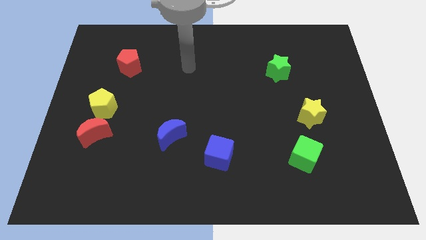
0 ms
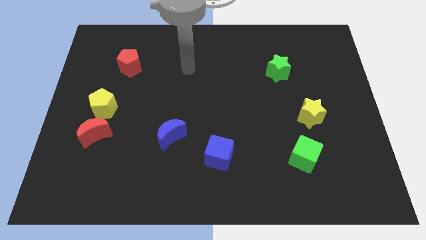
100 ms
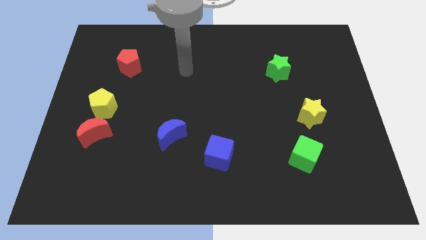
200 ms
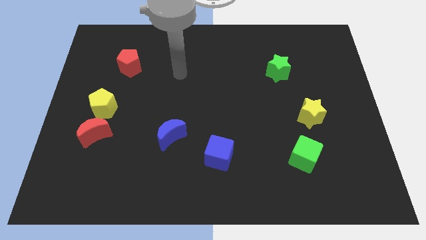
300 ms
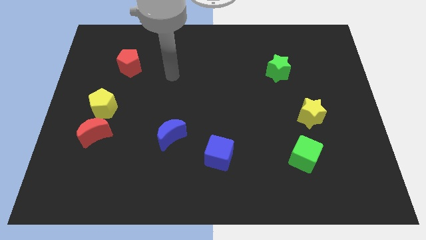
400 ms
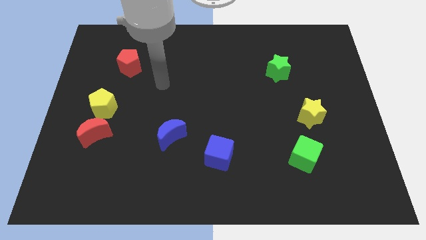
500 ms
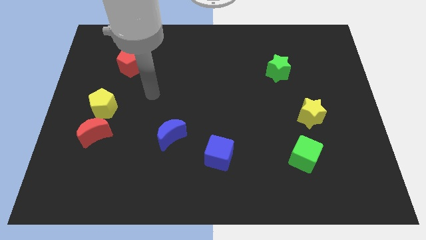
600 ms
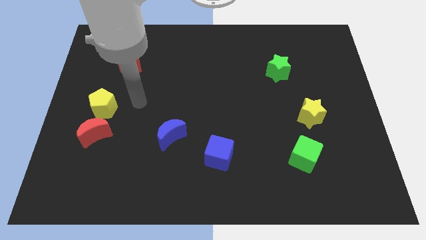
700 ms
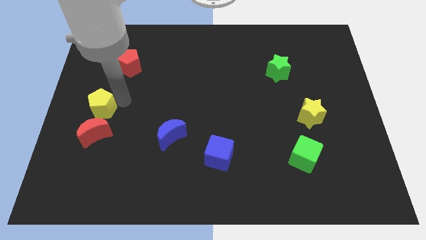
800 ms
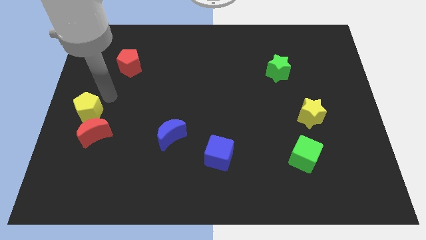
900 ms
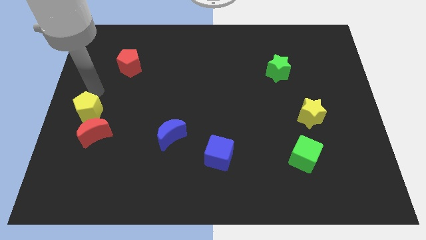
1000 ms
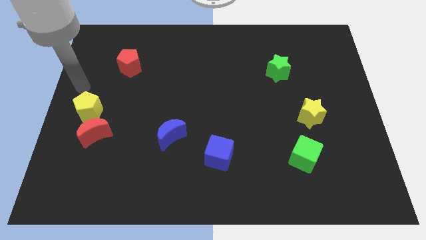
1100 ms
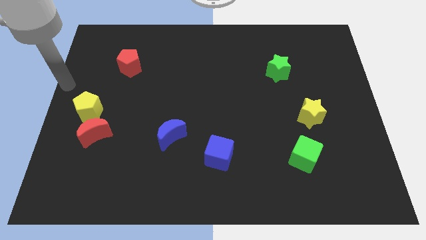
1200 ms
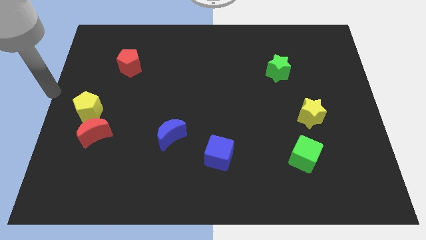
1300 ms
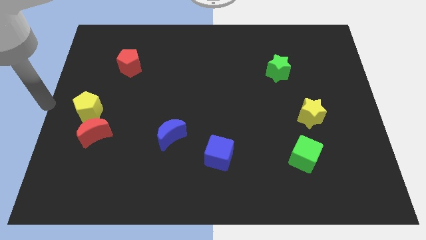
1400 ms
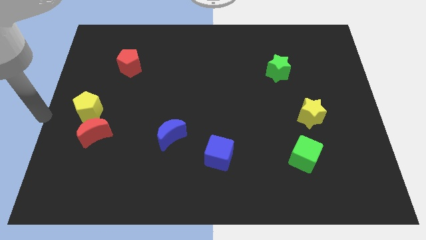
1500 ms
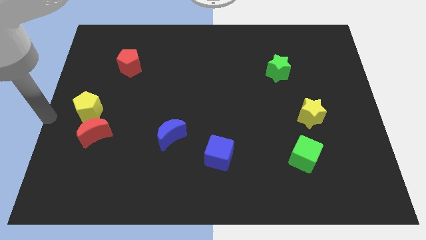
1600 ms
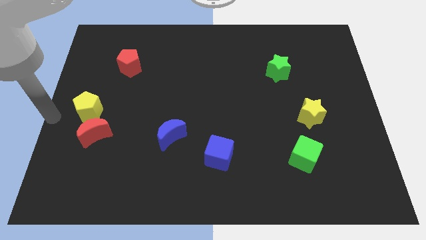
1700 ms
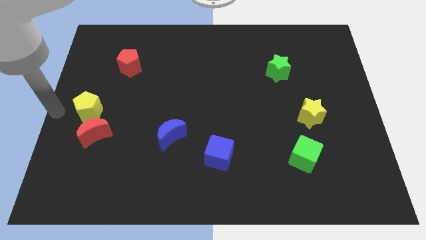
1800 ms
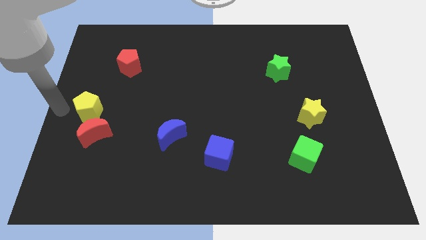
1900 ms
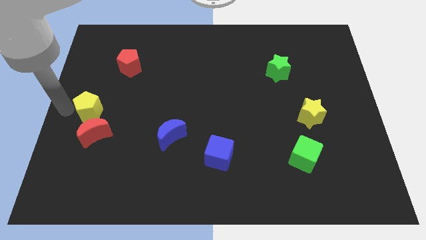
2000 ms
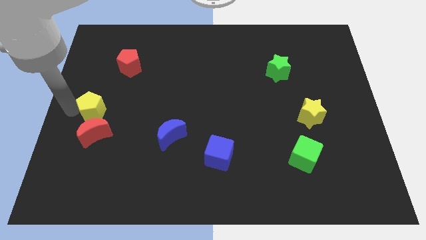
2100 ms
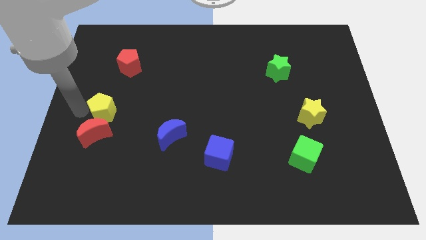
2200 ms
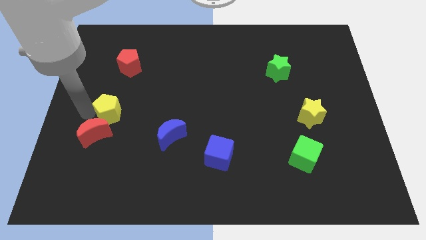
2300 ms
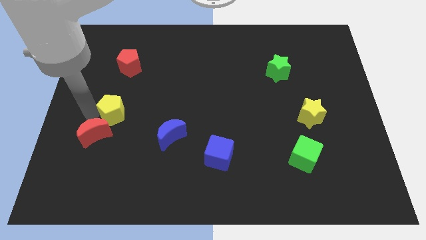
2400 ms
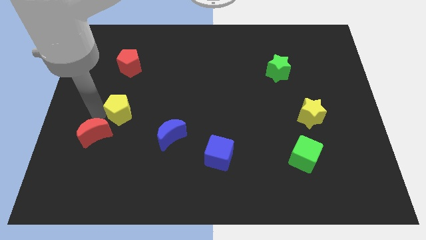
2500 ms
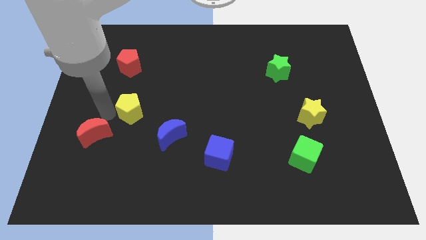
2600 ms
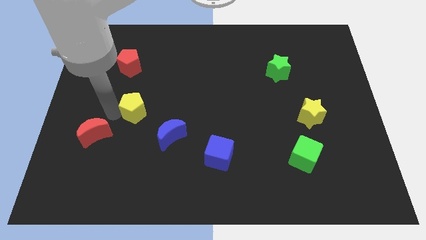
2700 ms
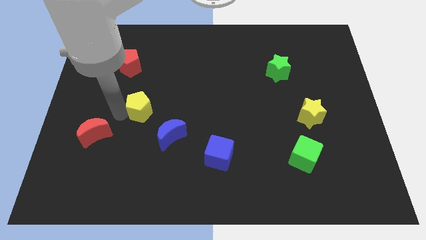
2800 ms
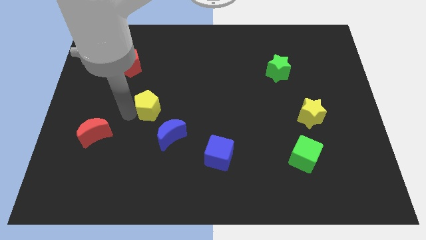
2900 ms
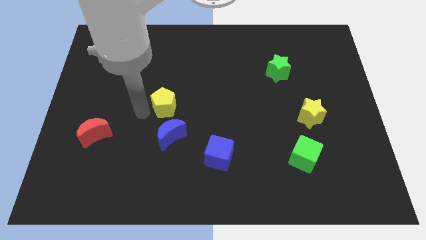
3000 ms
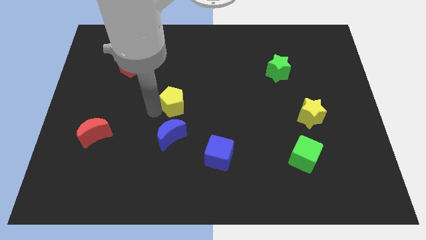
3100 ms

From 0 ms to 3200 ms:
slide the yellow pentagon vertically above the blue cube

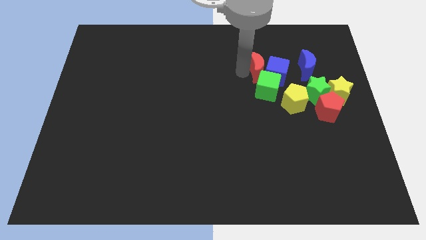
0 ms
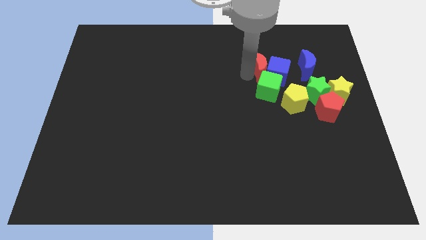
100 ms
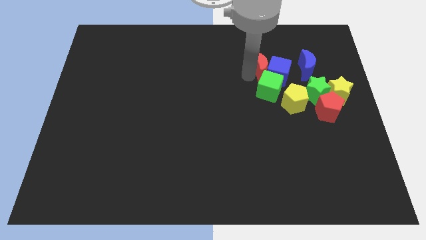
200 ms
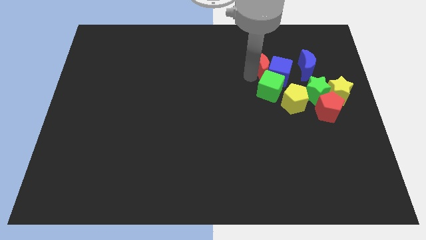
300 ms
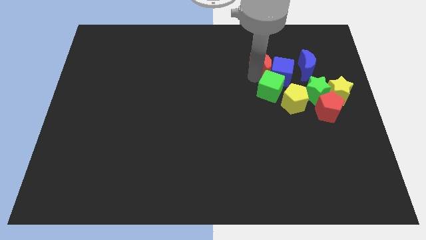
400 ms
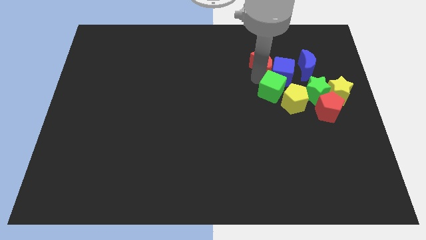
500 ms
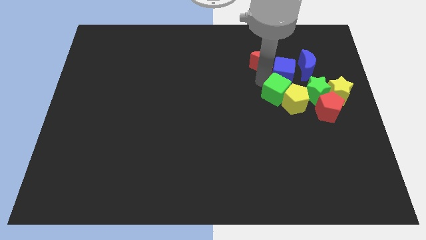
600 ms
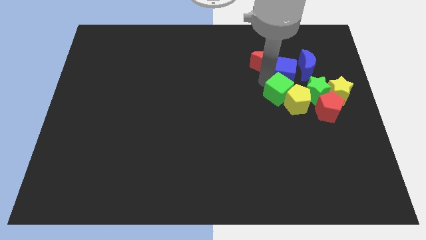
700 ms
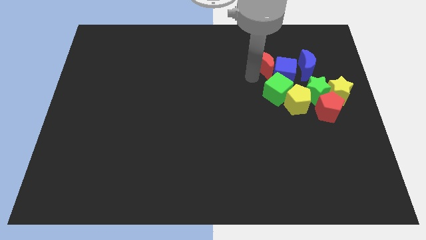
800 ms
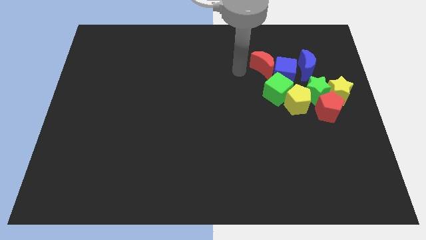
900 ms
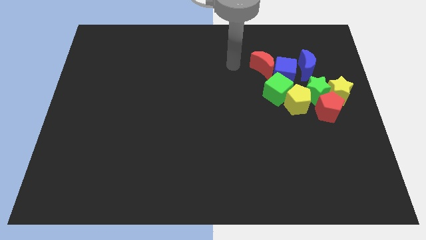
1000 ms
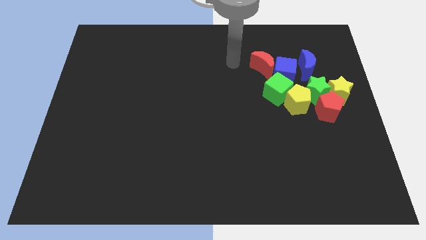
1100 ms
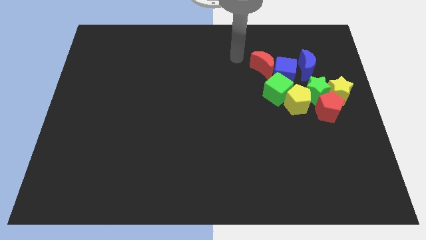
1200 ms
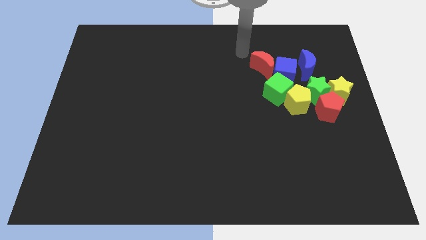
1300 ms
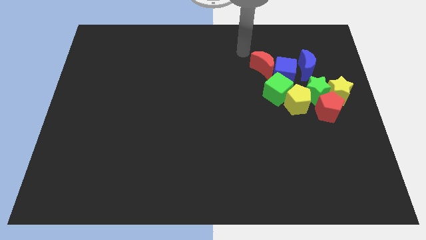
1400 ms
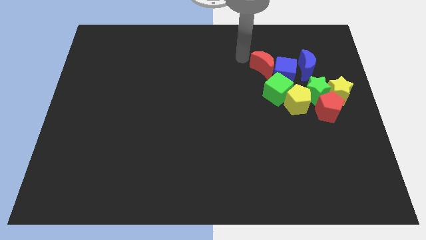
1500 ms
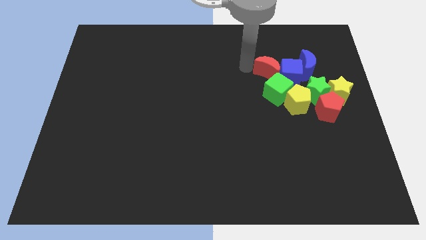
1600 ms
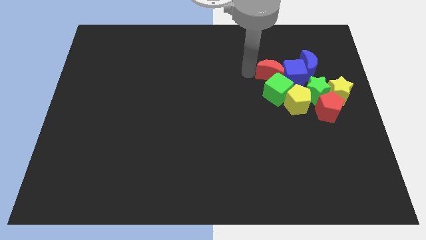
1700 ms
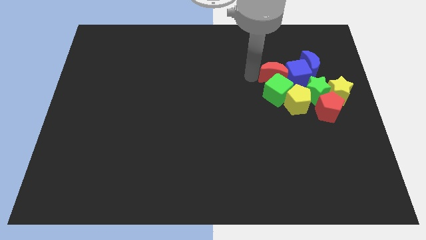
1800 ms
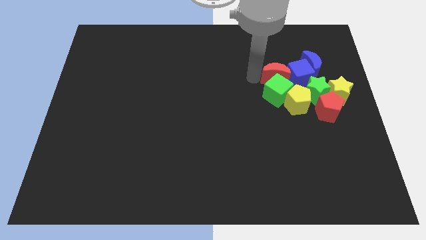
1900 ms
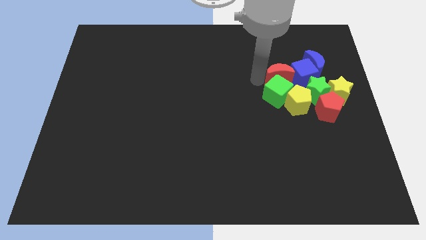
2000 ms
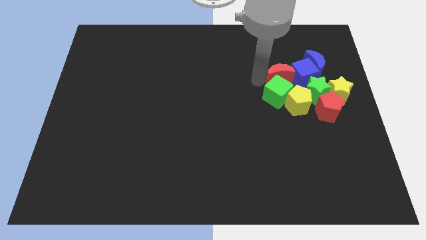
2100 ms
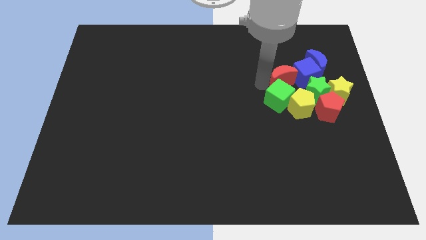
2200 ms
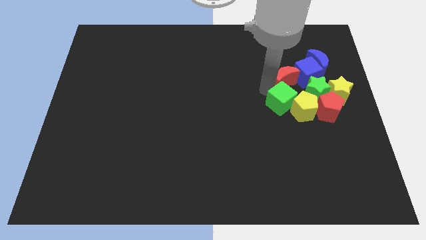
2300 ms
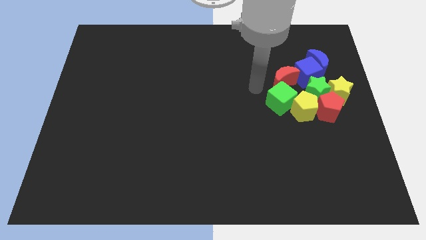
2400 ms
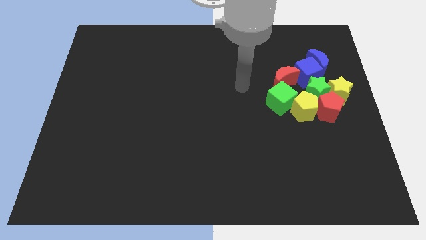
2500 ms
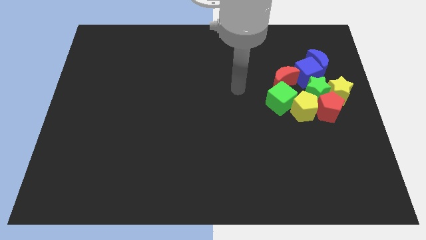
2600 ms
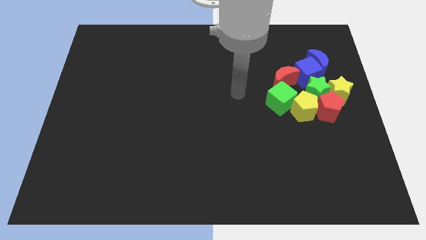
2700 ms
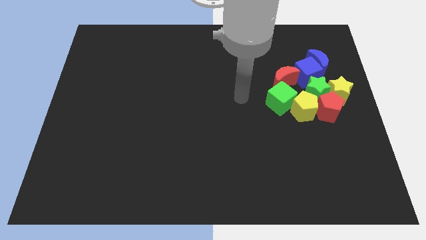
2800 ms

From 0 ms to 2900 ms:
move the red crescent into the group of blocks

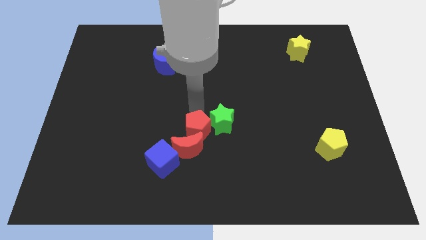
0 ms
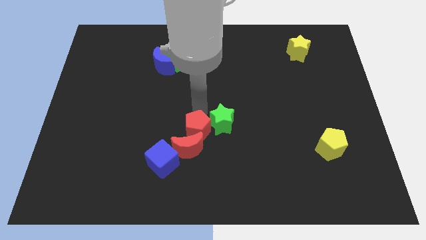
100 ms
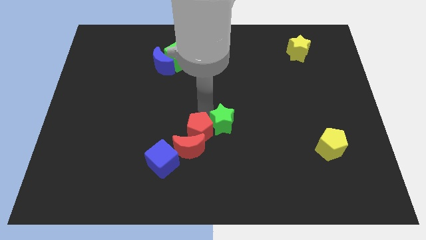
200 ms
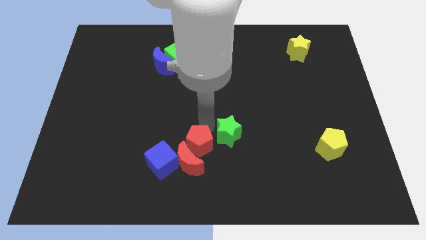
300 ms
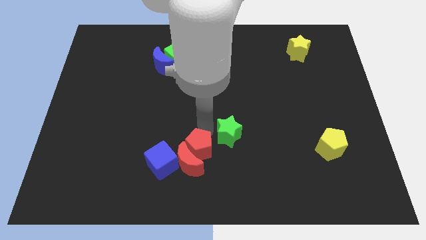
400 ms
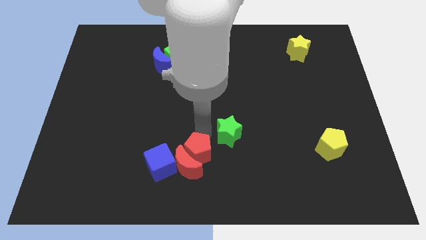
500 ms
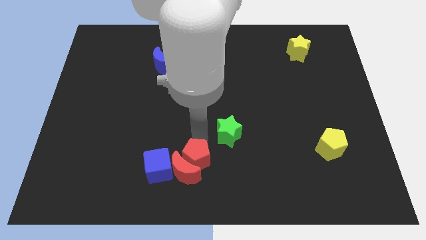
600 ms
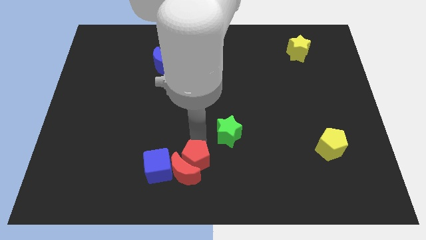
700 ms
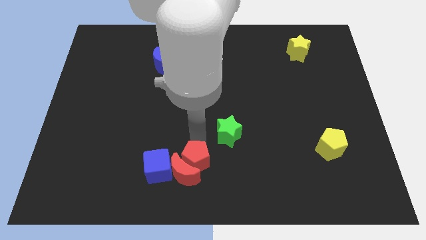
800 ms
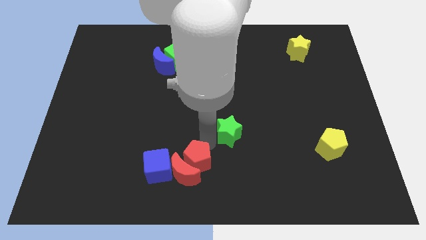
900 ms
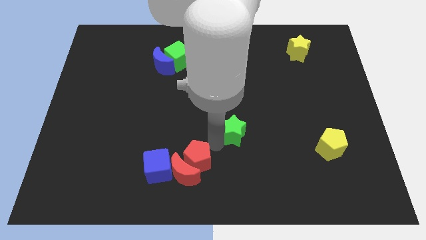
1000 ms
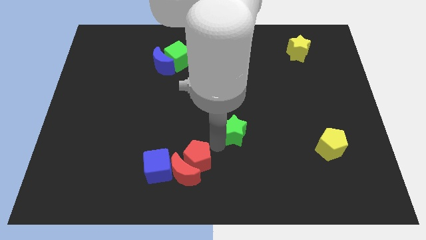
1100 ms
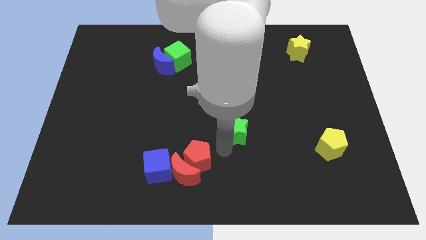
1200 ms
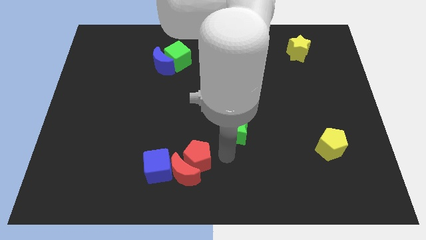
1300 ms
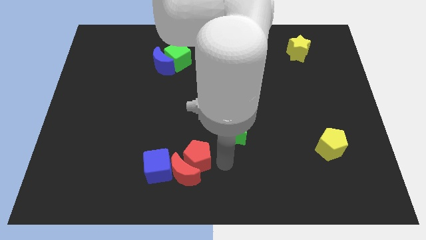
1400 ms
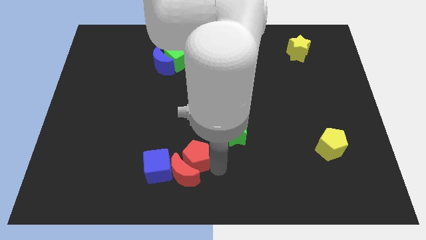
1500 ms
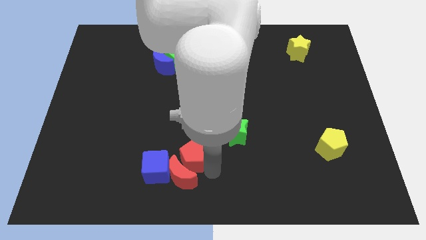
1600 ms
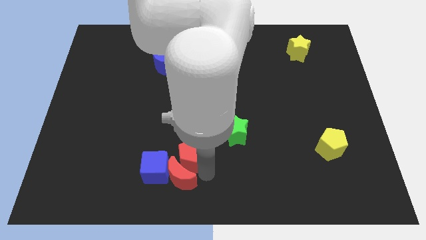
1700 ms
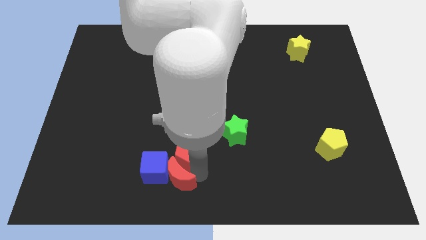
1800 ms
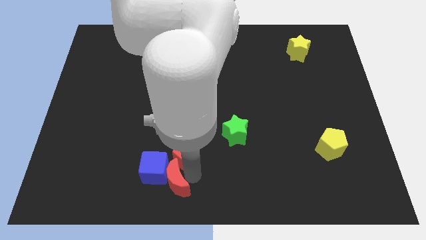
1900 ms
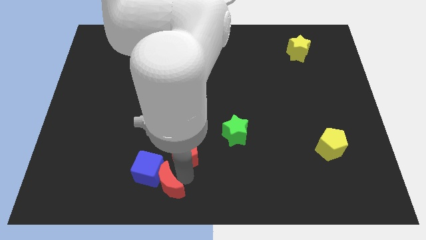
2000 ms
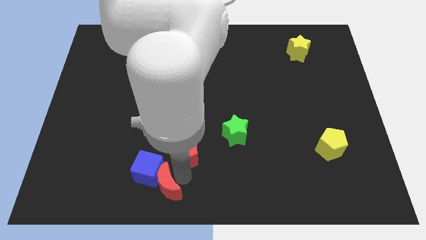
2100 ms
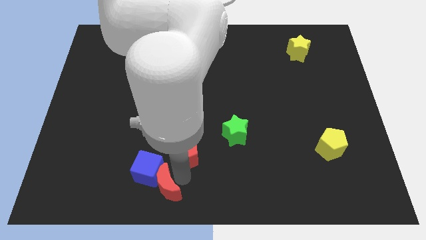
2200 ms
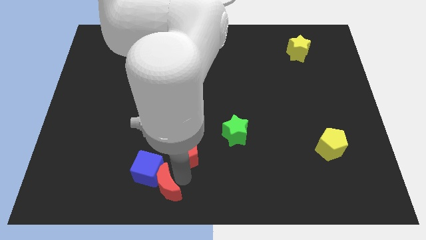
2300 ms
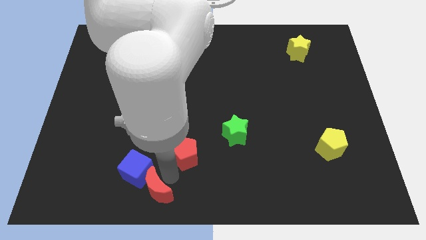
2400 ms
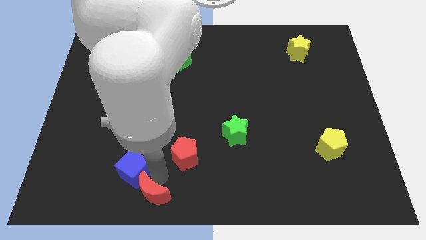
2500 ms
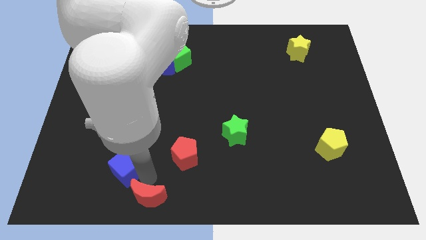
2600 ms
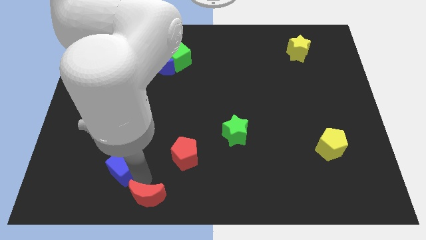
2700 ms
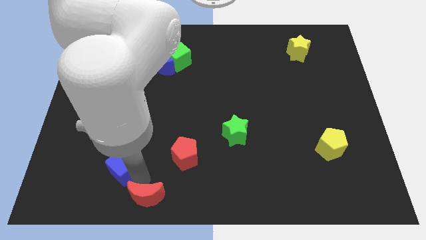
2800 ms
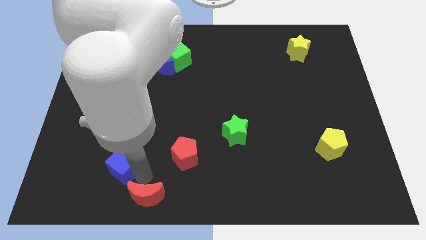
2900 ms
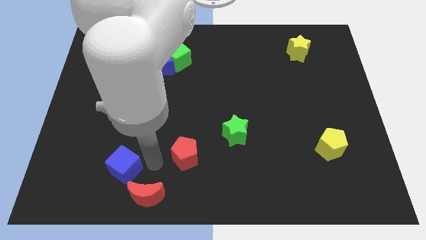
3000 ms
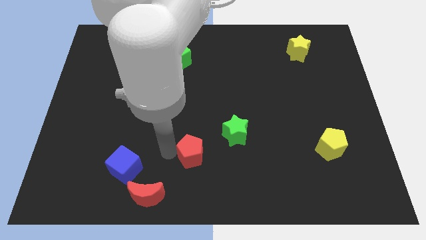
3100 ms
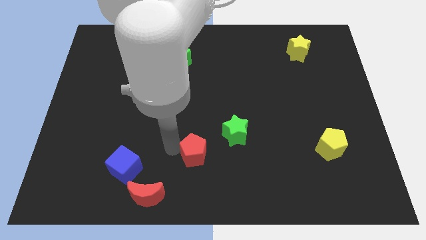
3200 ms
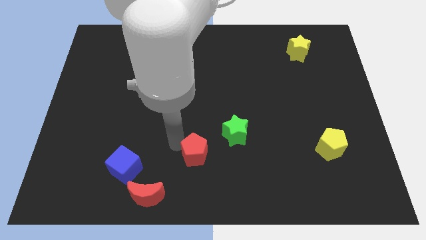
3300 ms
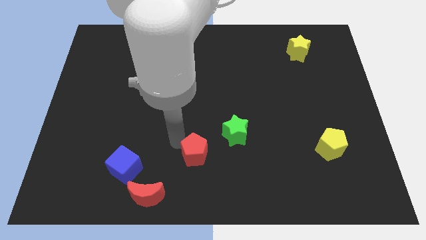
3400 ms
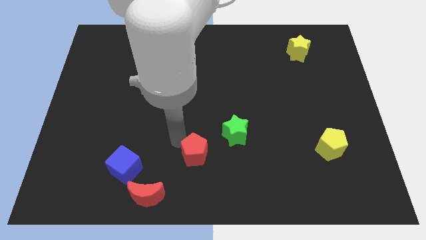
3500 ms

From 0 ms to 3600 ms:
separate red pentagon and the red moon
